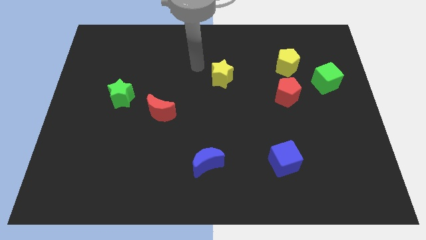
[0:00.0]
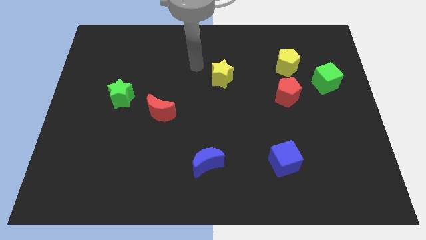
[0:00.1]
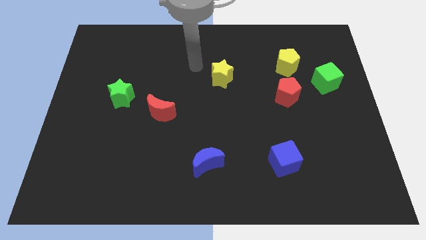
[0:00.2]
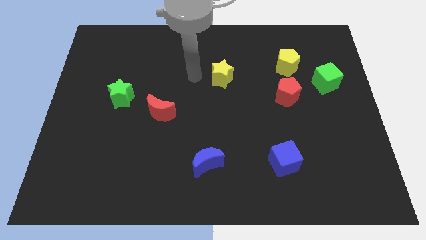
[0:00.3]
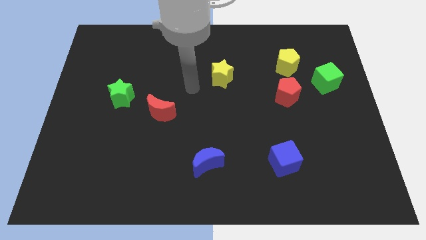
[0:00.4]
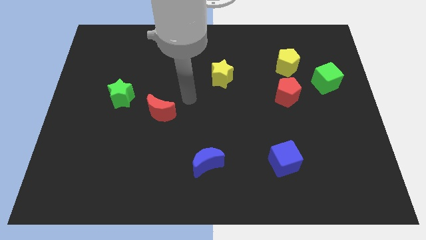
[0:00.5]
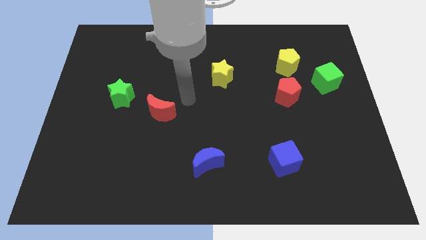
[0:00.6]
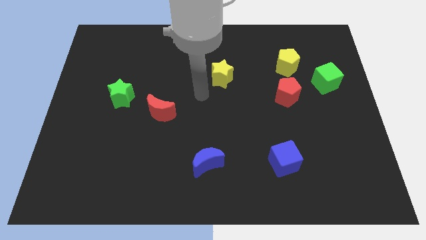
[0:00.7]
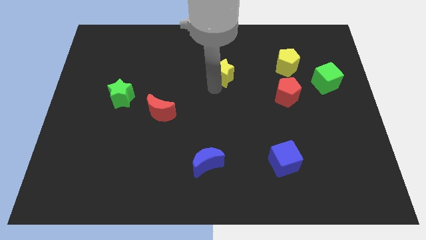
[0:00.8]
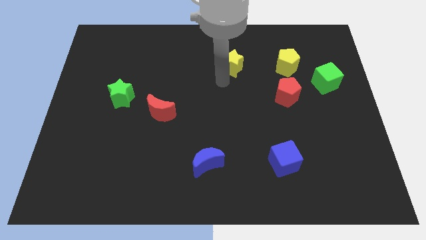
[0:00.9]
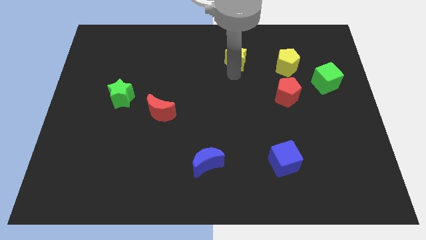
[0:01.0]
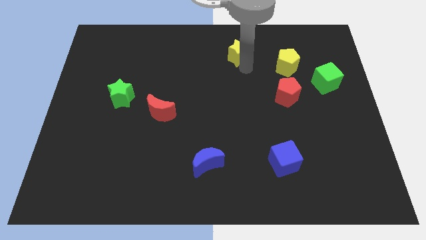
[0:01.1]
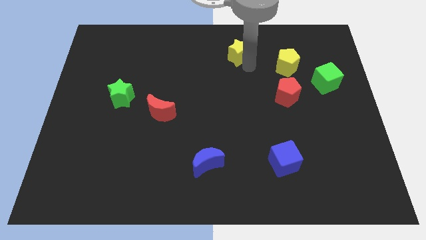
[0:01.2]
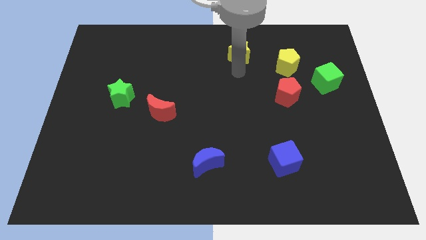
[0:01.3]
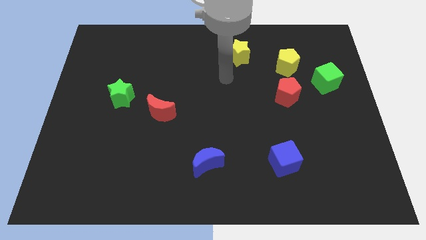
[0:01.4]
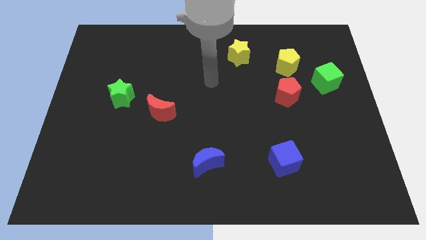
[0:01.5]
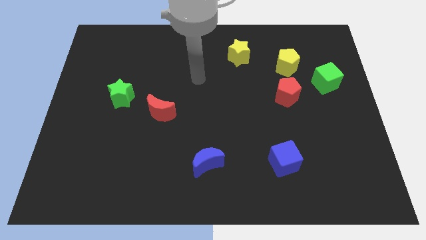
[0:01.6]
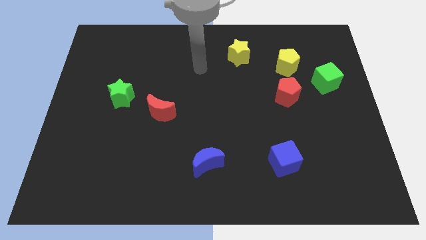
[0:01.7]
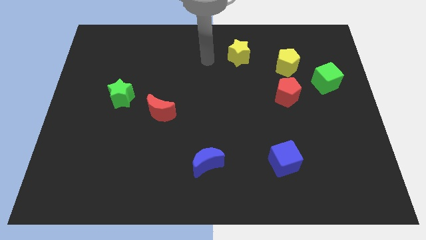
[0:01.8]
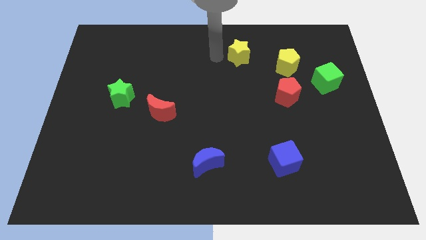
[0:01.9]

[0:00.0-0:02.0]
place your arm to the left of yellow star

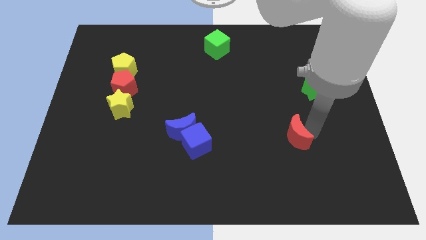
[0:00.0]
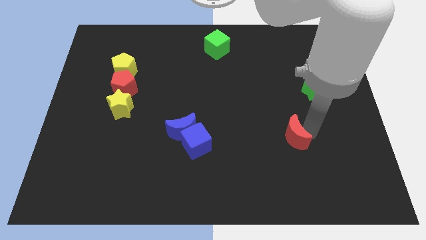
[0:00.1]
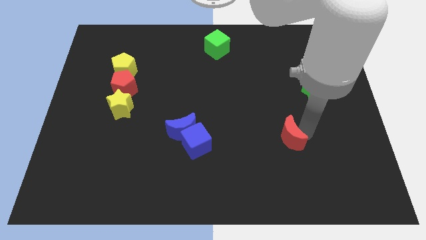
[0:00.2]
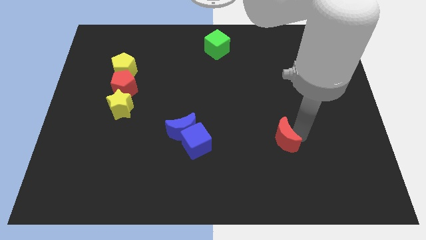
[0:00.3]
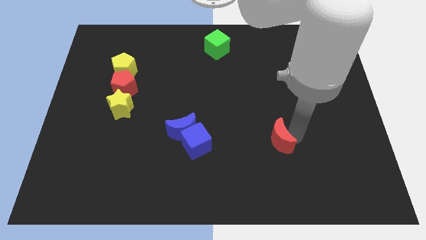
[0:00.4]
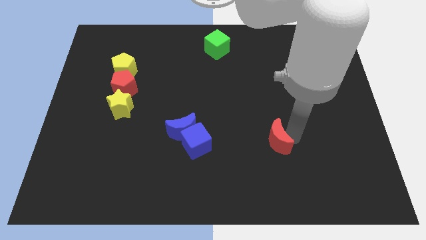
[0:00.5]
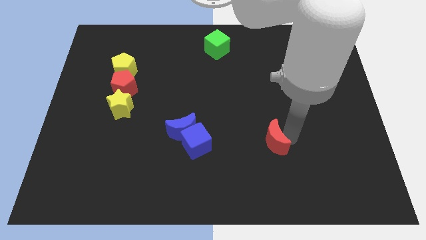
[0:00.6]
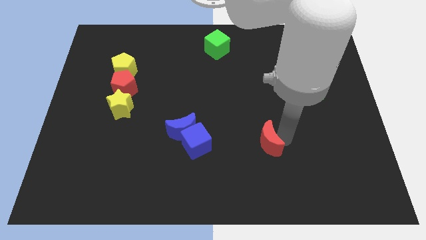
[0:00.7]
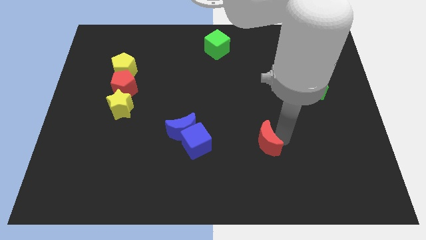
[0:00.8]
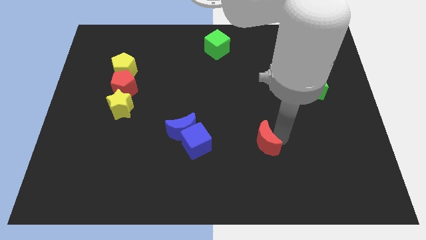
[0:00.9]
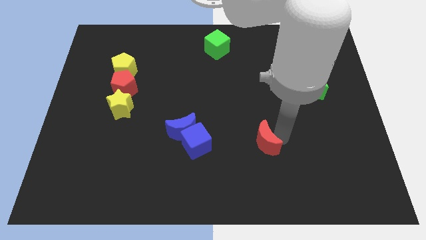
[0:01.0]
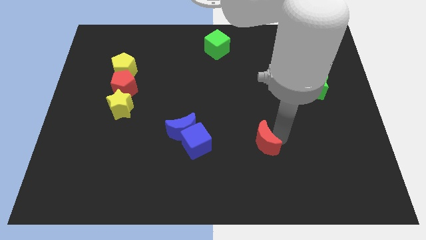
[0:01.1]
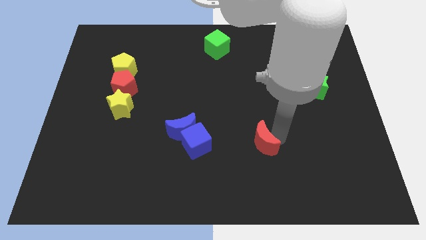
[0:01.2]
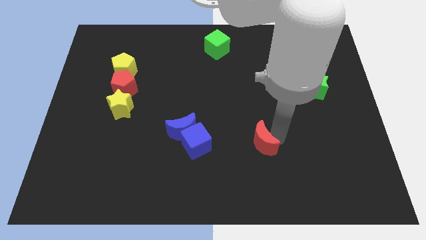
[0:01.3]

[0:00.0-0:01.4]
move the red moon towards the blue blocks

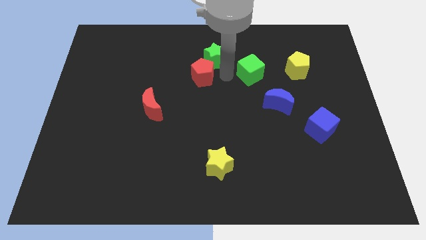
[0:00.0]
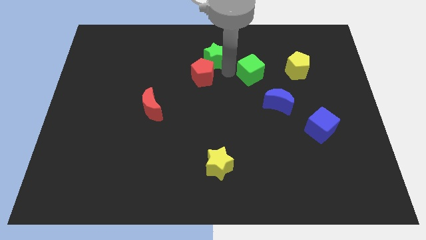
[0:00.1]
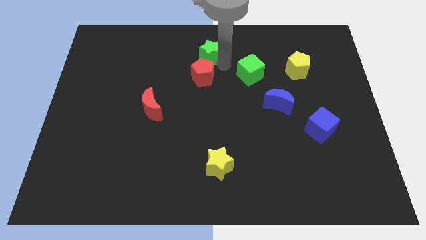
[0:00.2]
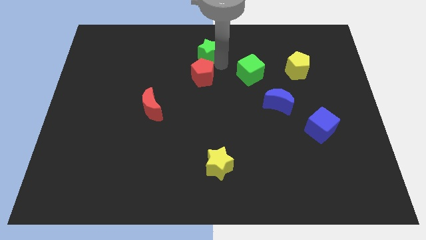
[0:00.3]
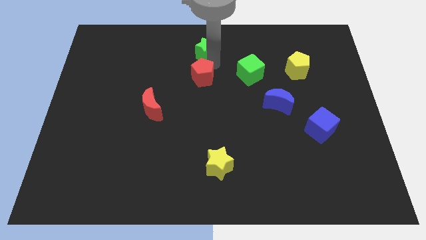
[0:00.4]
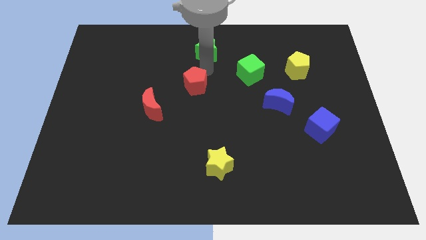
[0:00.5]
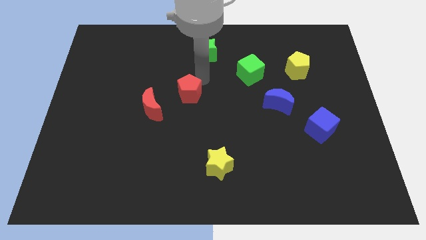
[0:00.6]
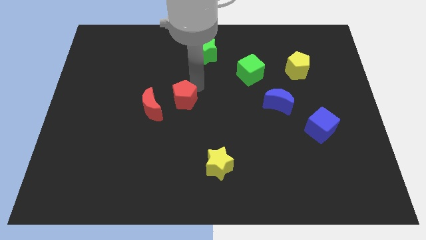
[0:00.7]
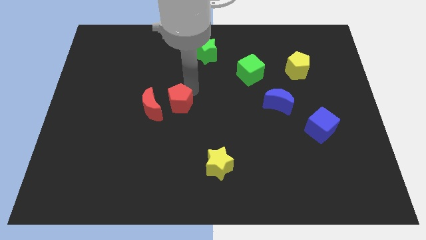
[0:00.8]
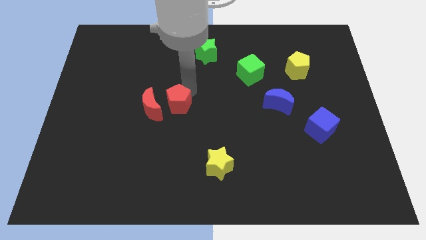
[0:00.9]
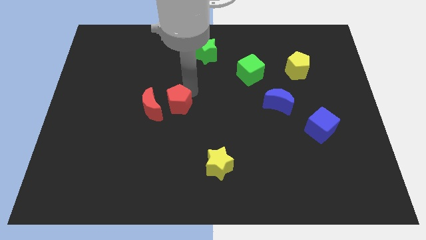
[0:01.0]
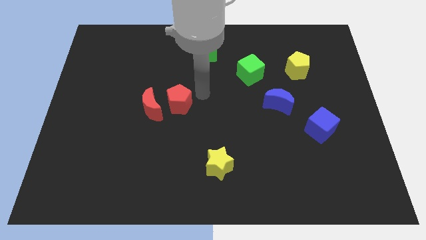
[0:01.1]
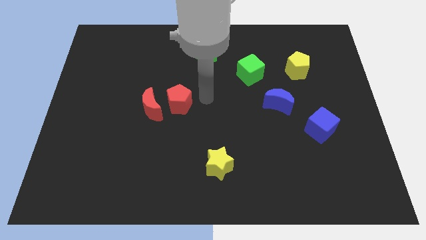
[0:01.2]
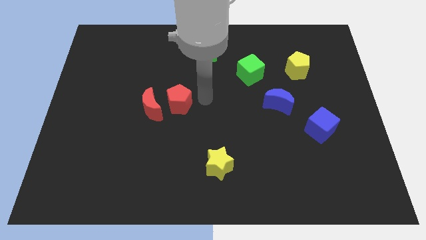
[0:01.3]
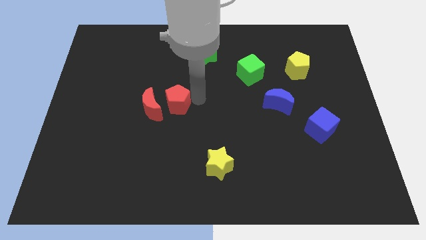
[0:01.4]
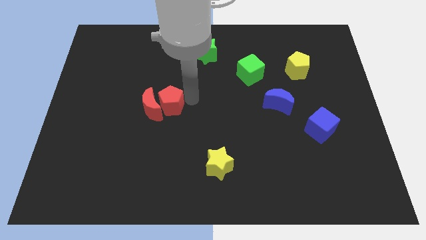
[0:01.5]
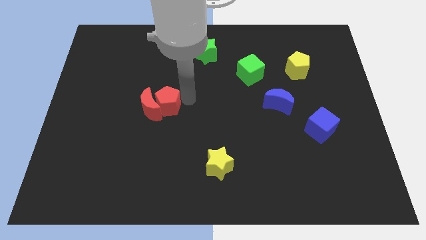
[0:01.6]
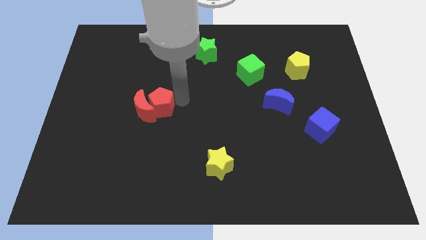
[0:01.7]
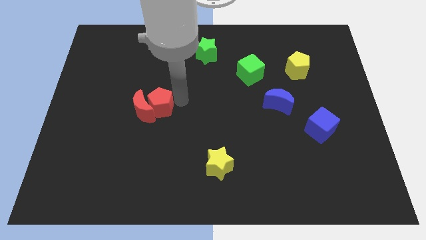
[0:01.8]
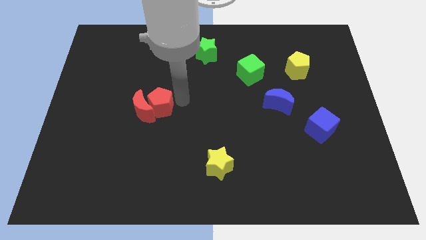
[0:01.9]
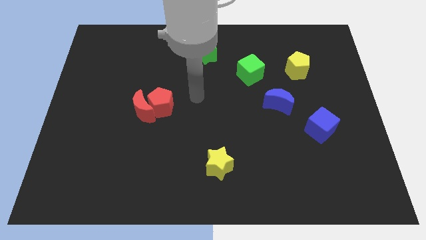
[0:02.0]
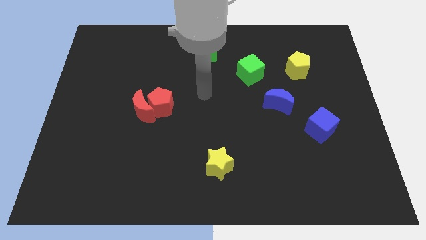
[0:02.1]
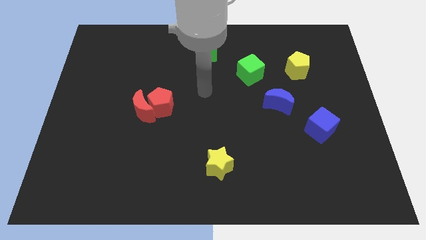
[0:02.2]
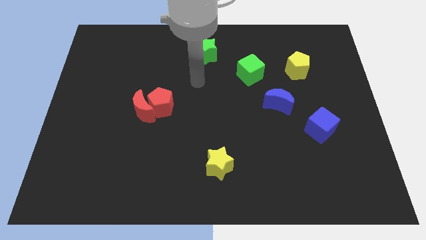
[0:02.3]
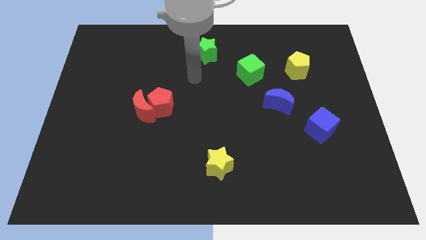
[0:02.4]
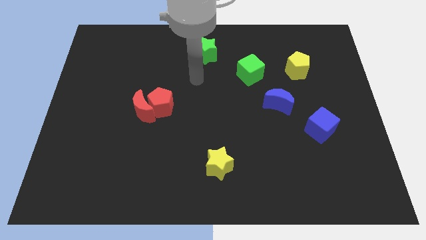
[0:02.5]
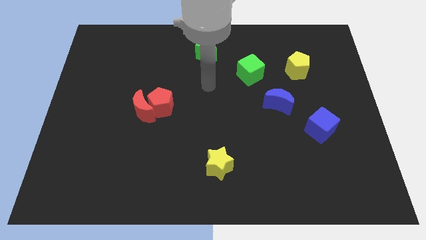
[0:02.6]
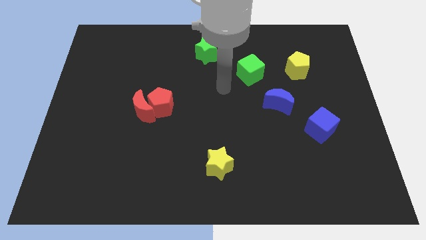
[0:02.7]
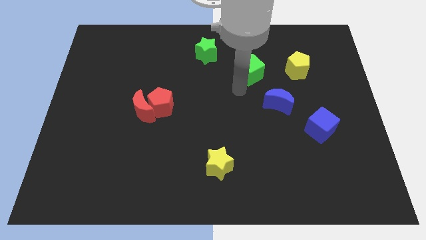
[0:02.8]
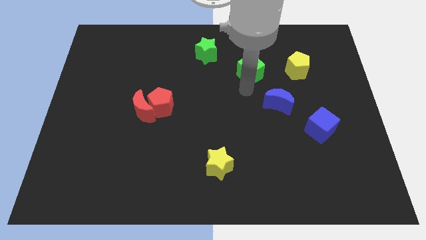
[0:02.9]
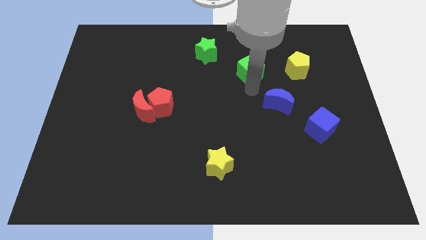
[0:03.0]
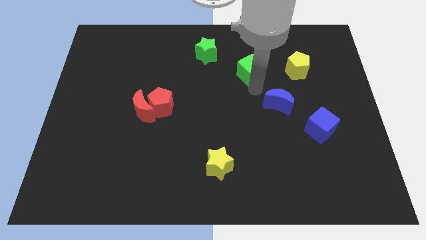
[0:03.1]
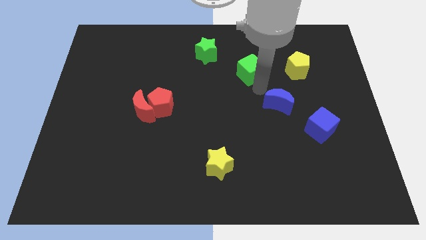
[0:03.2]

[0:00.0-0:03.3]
push the red pentagon into the red moon

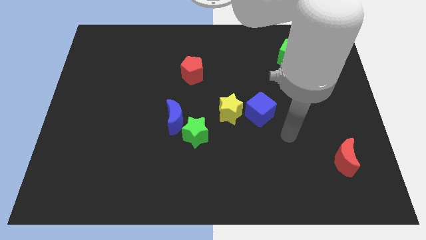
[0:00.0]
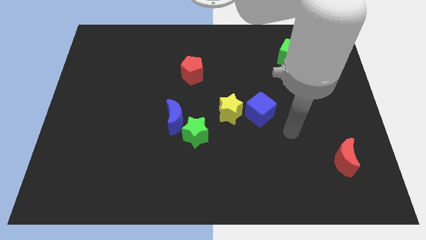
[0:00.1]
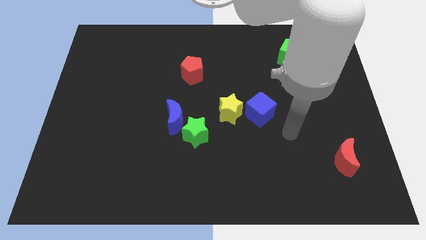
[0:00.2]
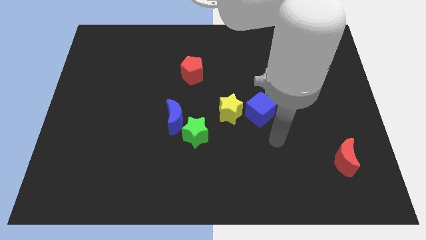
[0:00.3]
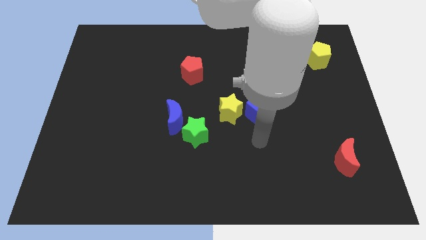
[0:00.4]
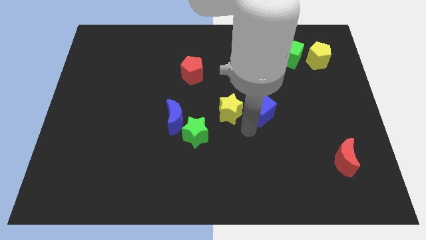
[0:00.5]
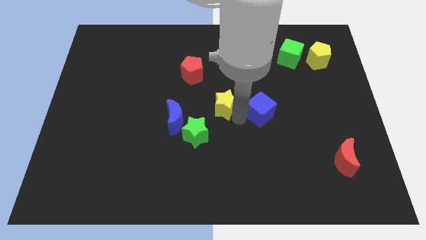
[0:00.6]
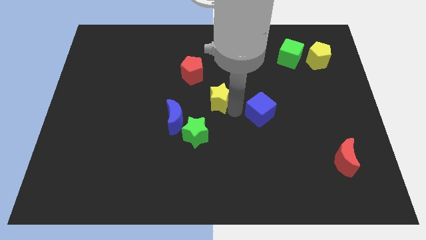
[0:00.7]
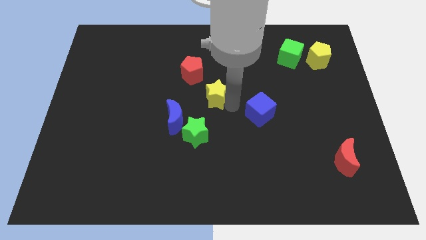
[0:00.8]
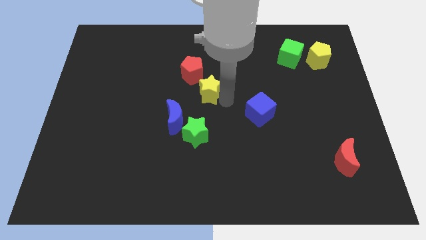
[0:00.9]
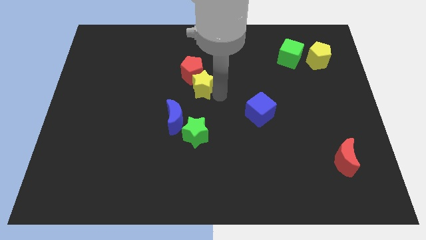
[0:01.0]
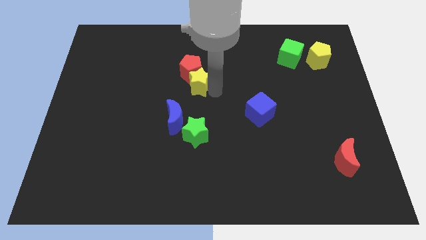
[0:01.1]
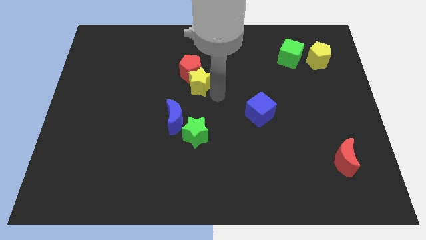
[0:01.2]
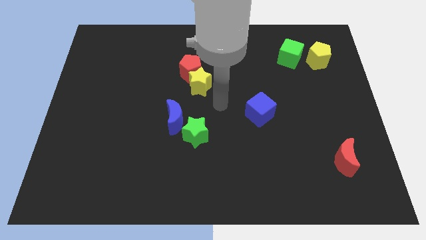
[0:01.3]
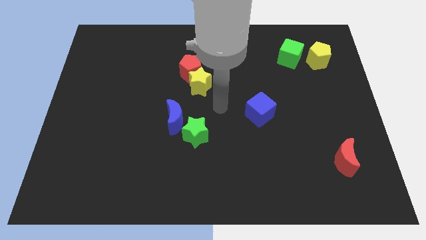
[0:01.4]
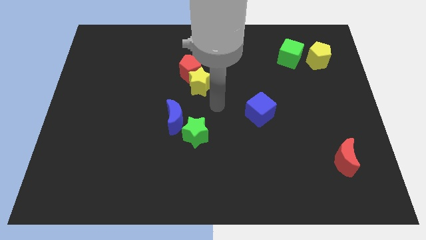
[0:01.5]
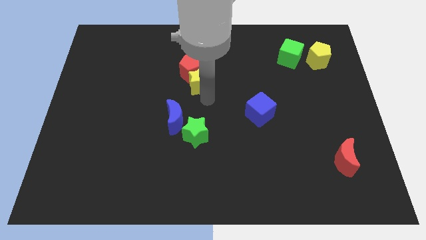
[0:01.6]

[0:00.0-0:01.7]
push the yellow star to the bottom of the red pentagon diagonally

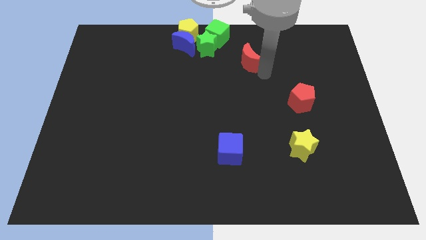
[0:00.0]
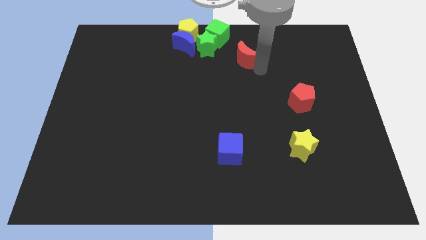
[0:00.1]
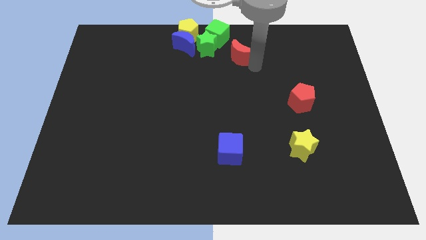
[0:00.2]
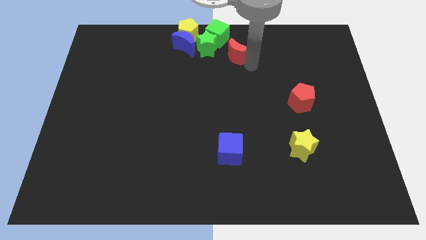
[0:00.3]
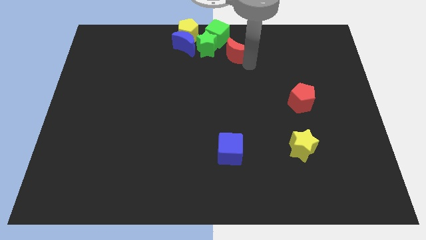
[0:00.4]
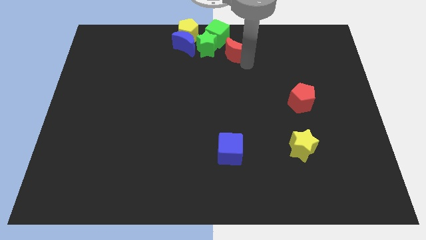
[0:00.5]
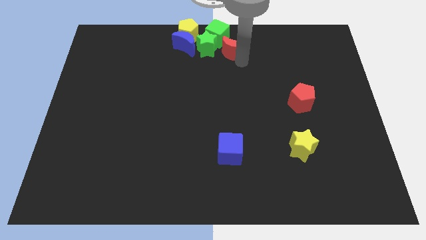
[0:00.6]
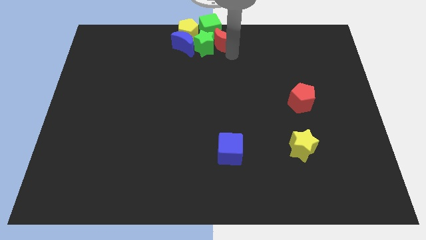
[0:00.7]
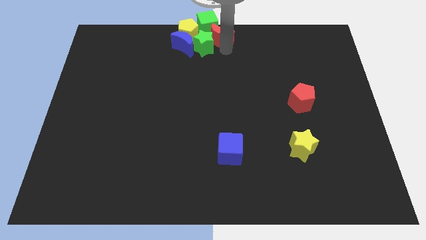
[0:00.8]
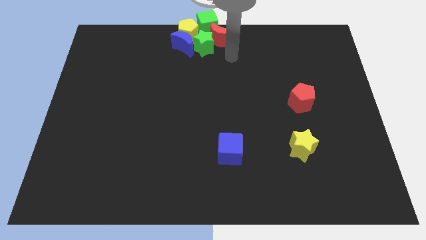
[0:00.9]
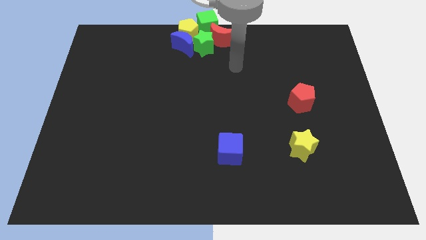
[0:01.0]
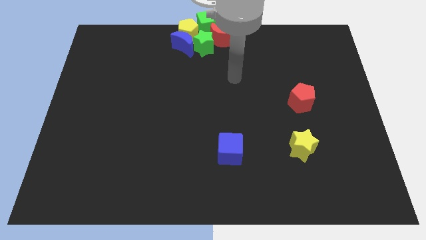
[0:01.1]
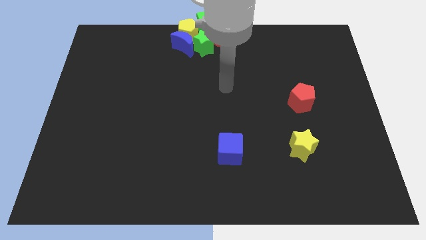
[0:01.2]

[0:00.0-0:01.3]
push the red crescent into the green blocks
